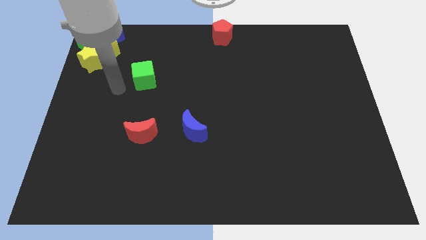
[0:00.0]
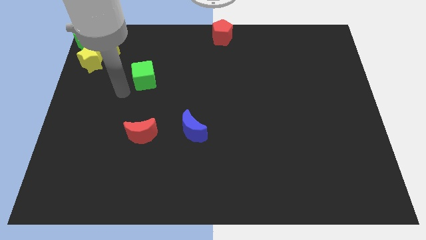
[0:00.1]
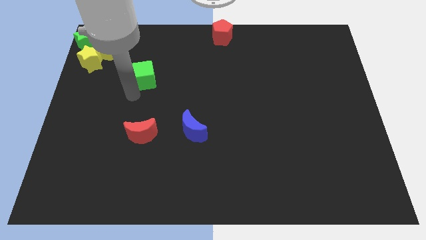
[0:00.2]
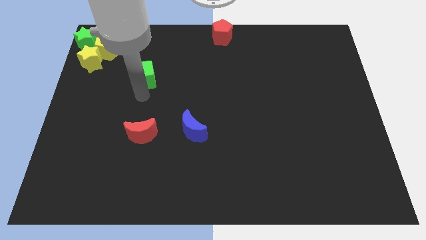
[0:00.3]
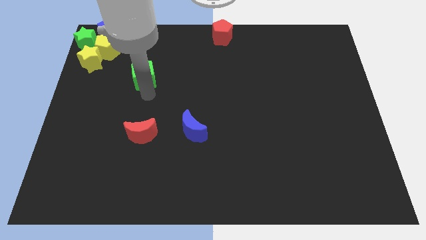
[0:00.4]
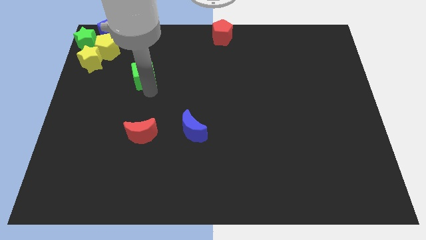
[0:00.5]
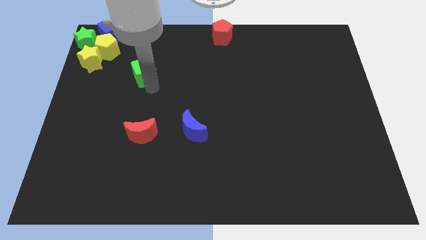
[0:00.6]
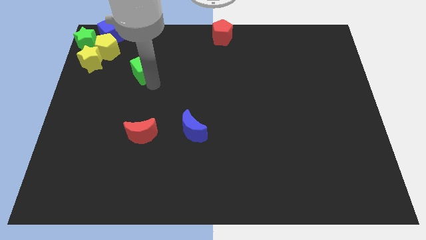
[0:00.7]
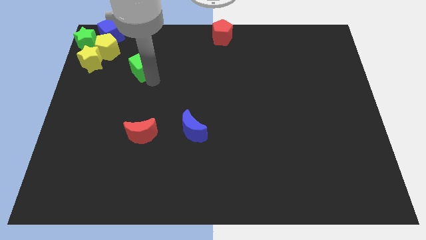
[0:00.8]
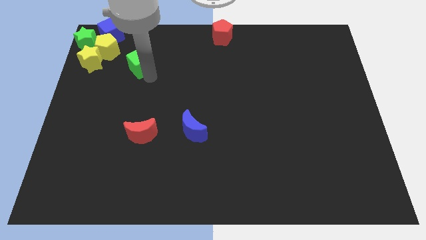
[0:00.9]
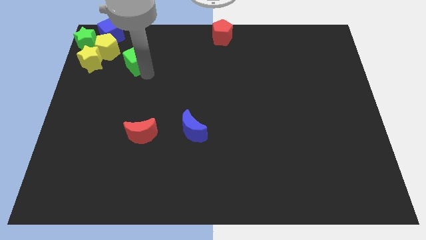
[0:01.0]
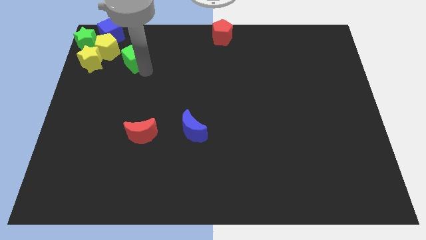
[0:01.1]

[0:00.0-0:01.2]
push the green cube towards the yellow pentagon

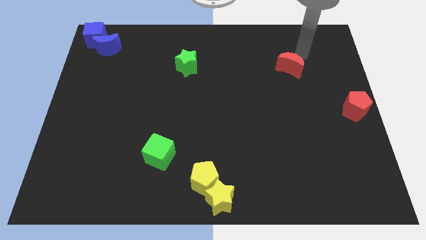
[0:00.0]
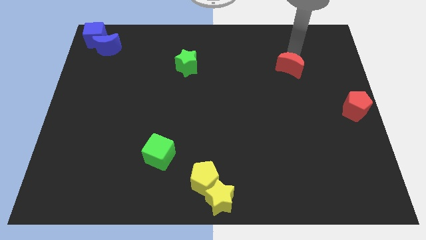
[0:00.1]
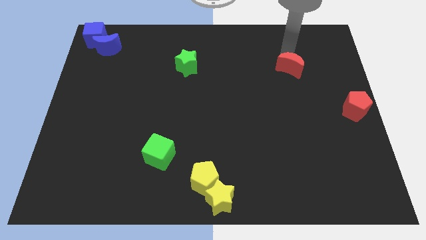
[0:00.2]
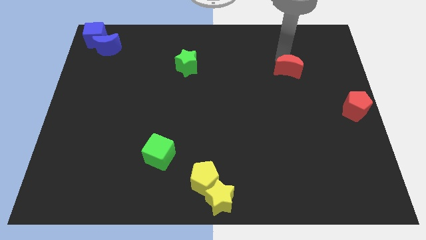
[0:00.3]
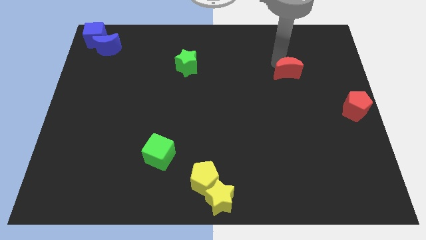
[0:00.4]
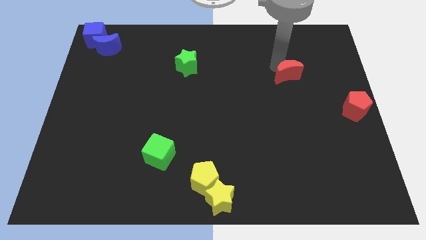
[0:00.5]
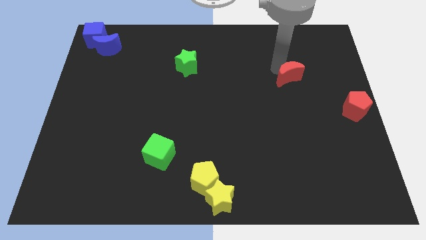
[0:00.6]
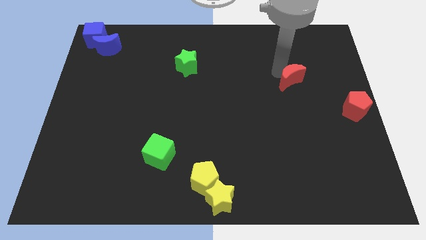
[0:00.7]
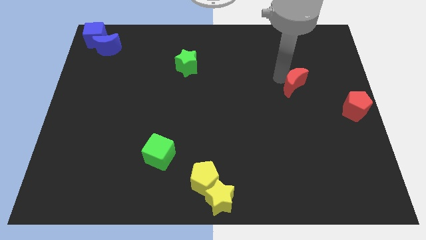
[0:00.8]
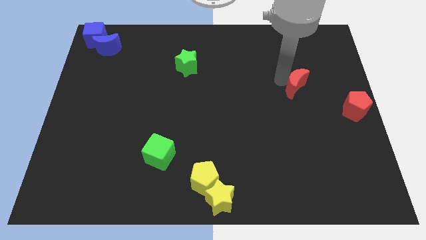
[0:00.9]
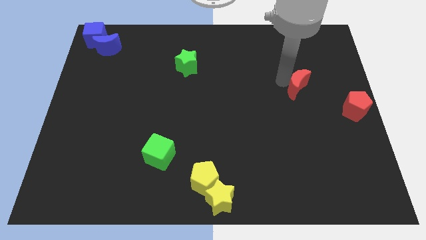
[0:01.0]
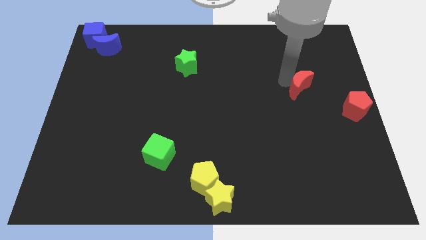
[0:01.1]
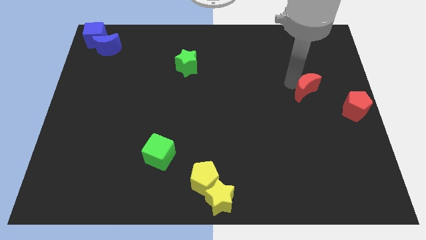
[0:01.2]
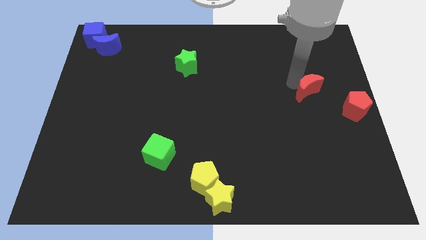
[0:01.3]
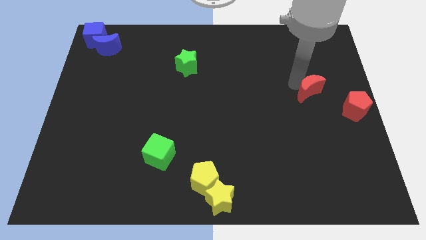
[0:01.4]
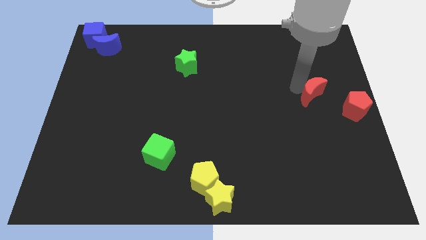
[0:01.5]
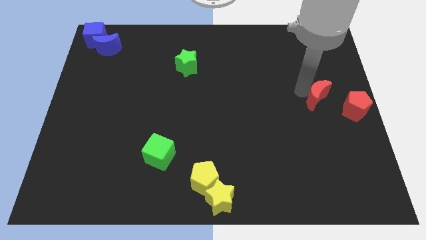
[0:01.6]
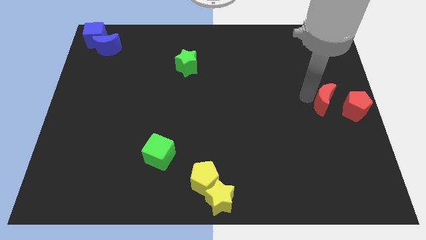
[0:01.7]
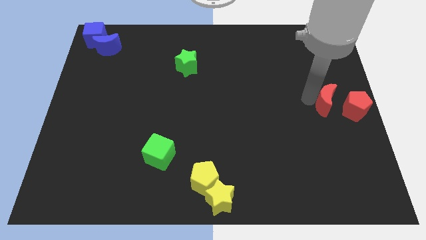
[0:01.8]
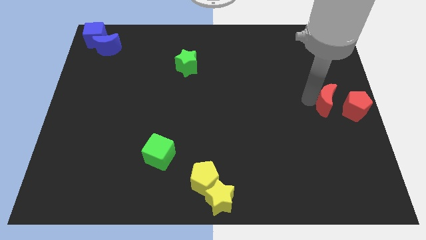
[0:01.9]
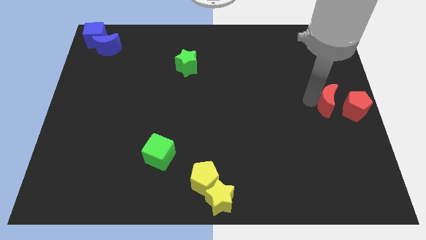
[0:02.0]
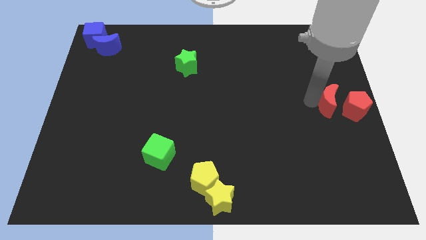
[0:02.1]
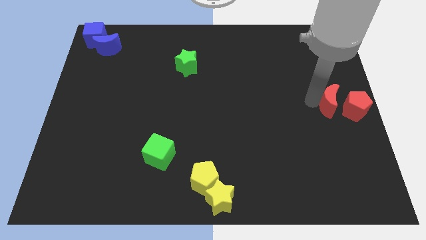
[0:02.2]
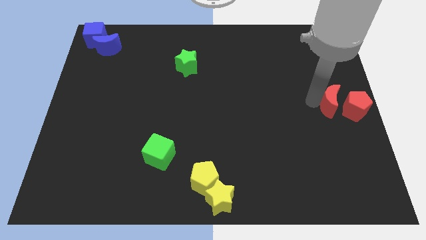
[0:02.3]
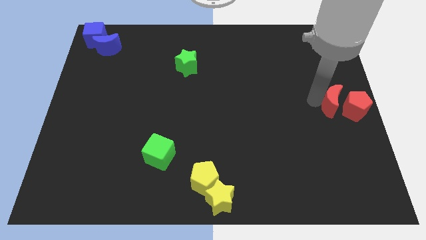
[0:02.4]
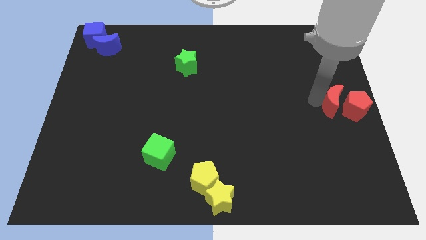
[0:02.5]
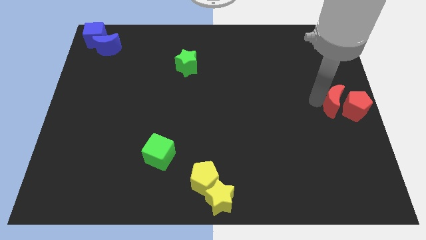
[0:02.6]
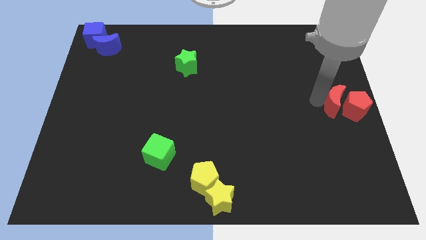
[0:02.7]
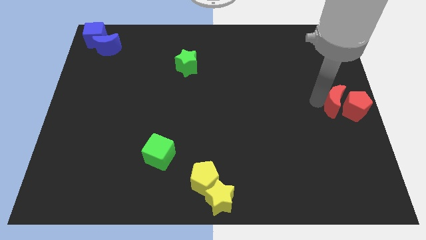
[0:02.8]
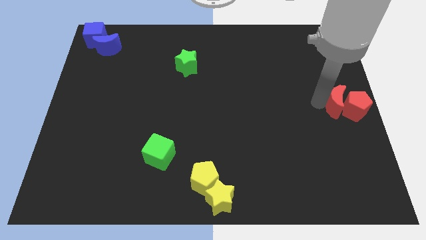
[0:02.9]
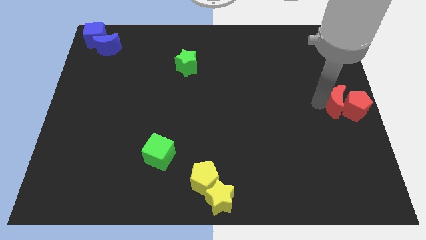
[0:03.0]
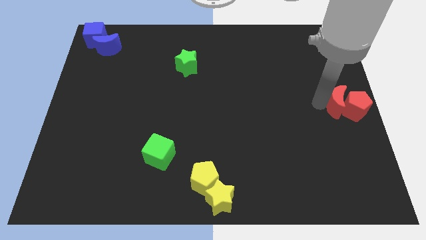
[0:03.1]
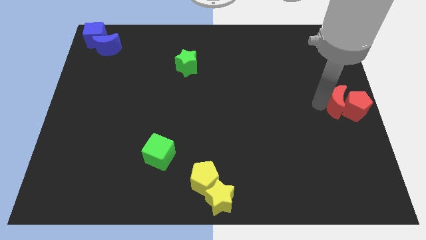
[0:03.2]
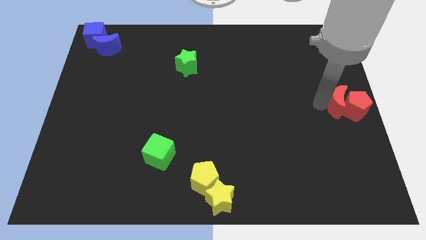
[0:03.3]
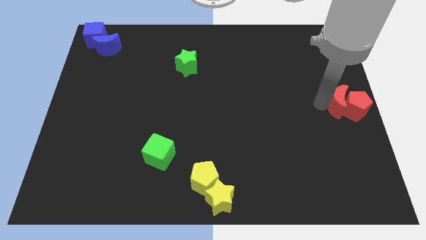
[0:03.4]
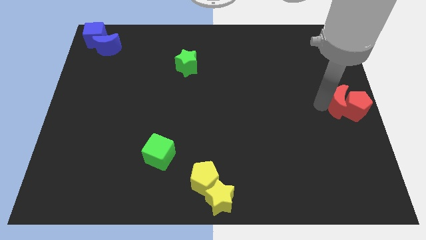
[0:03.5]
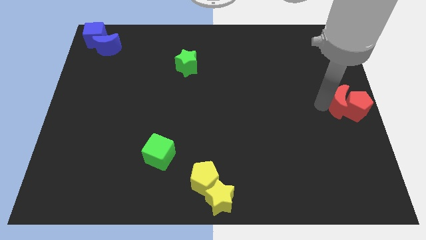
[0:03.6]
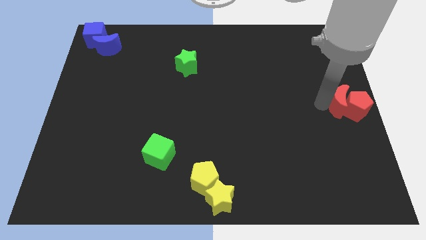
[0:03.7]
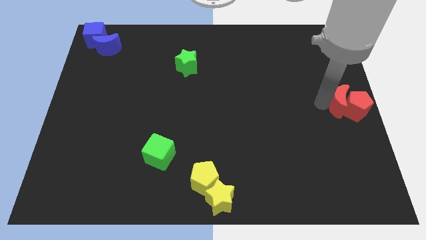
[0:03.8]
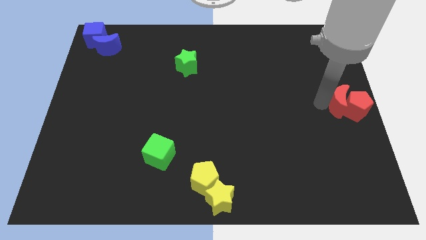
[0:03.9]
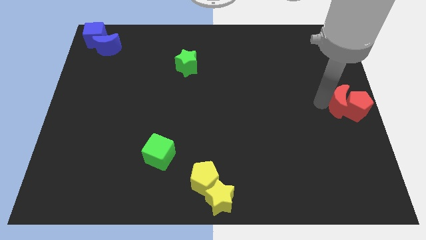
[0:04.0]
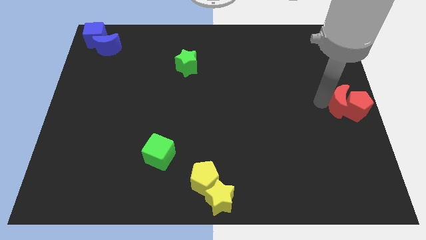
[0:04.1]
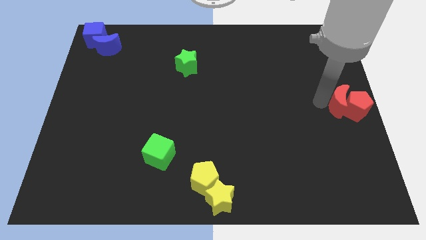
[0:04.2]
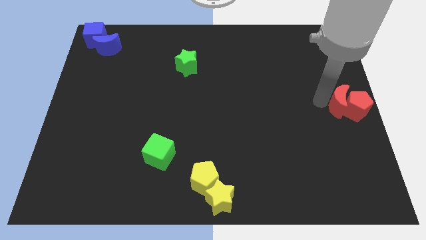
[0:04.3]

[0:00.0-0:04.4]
place the red crescent left to the red pentagon

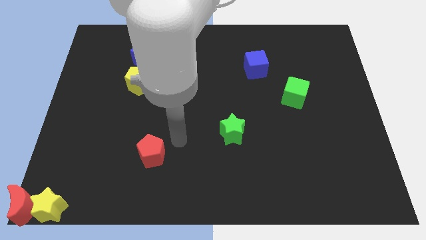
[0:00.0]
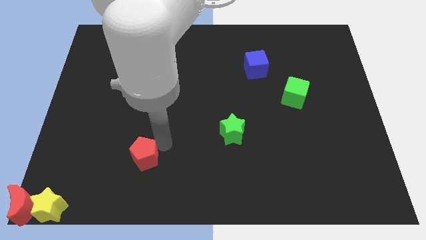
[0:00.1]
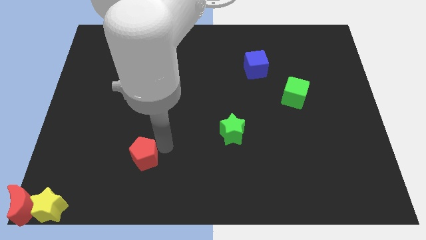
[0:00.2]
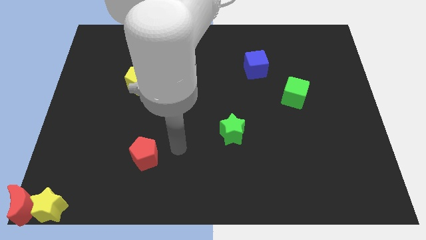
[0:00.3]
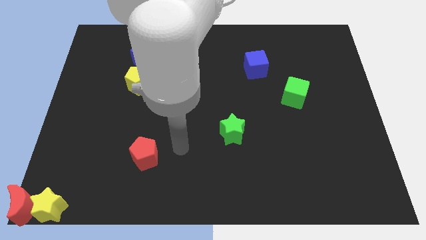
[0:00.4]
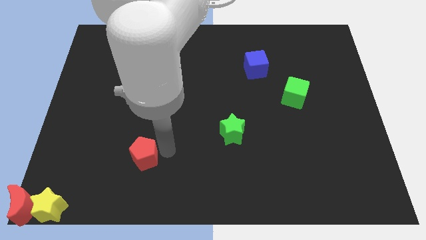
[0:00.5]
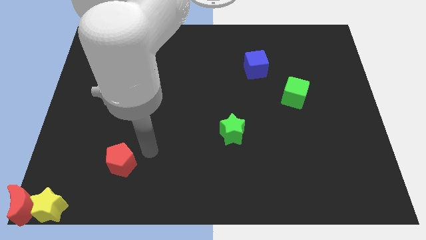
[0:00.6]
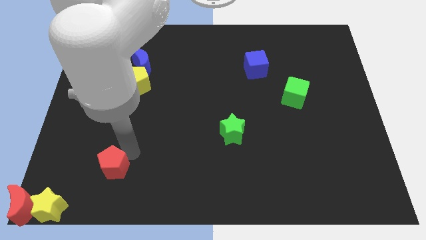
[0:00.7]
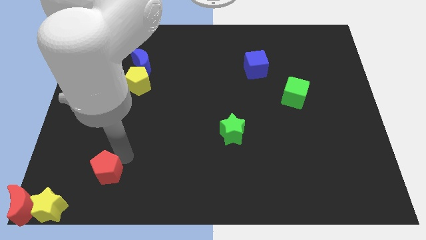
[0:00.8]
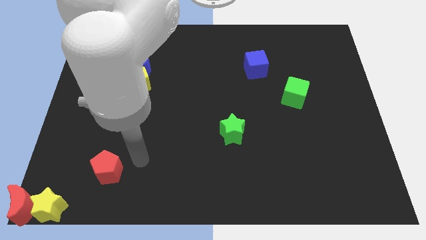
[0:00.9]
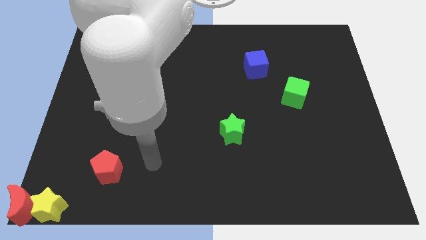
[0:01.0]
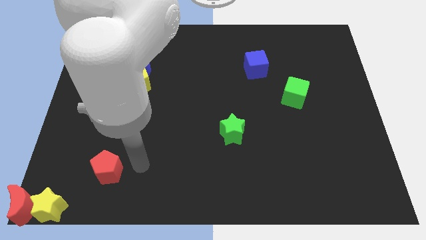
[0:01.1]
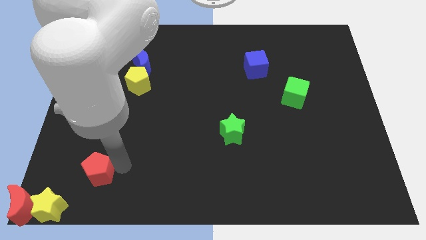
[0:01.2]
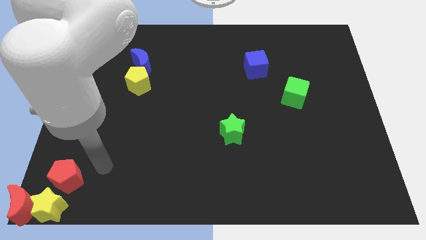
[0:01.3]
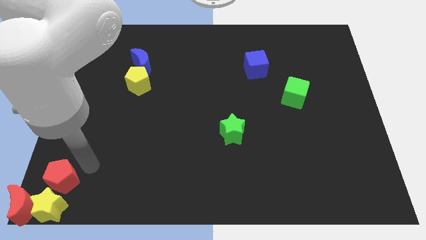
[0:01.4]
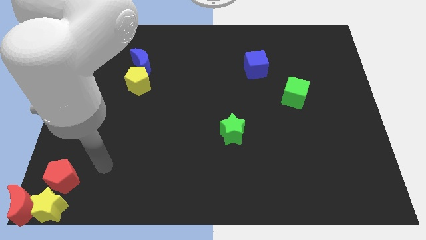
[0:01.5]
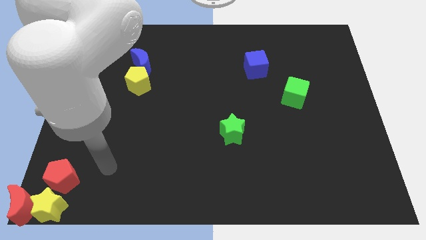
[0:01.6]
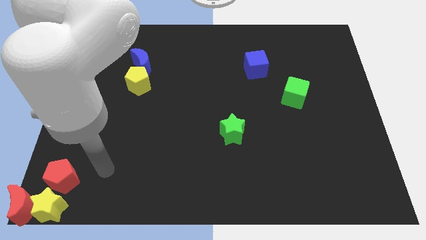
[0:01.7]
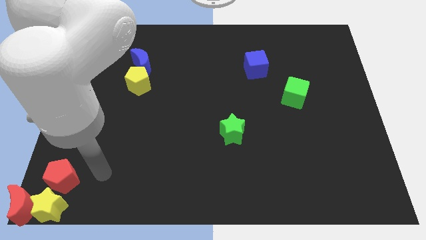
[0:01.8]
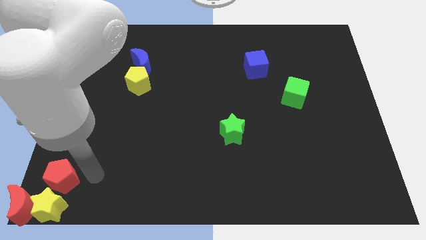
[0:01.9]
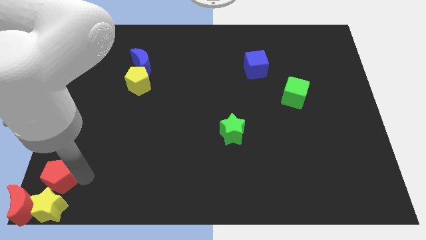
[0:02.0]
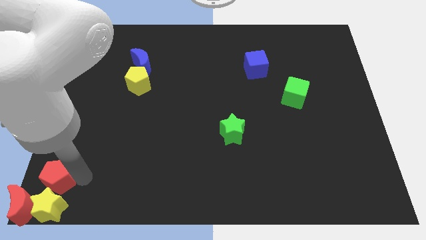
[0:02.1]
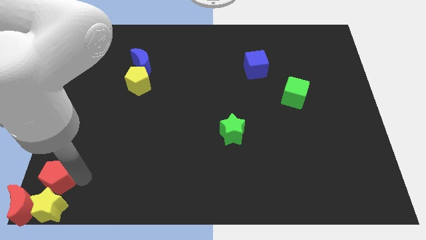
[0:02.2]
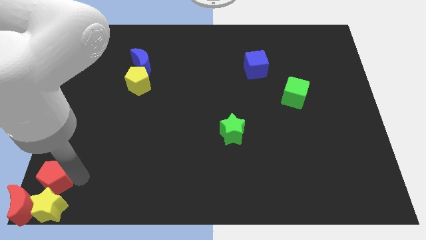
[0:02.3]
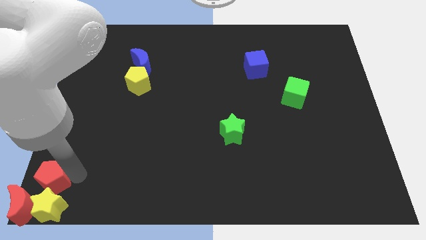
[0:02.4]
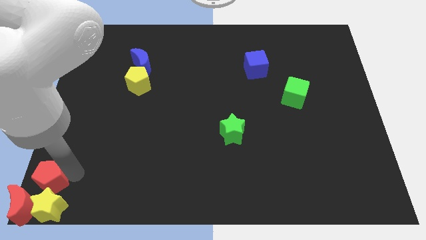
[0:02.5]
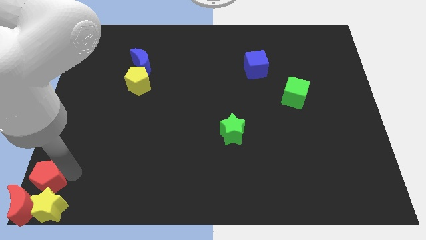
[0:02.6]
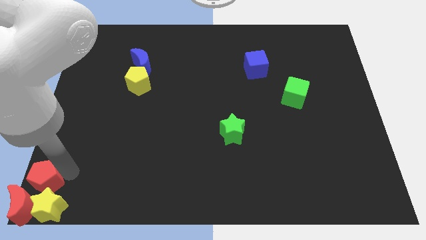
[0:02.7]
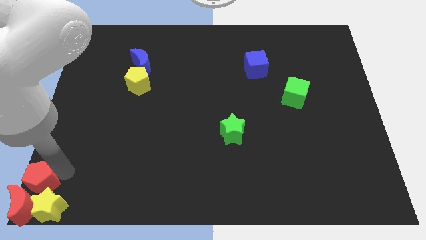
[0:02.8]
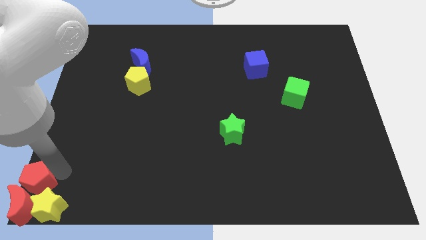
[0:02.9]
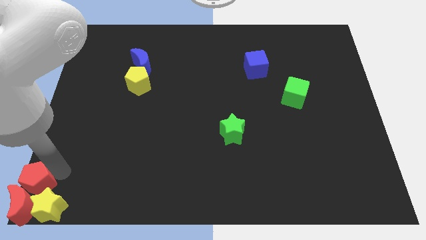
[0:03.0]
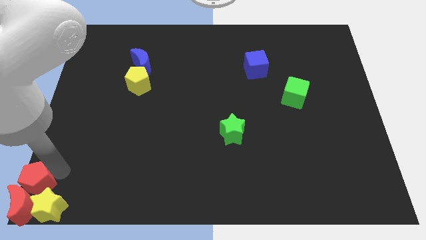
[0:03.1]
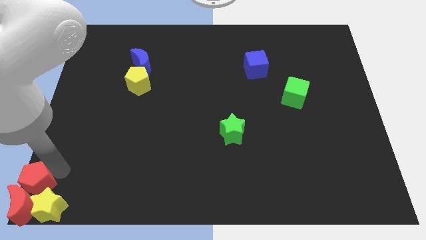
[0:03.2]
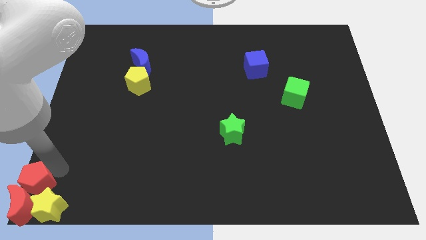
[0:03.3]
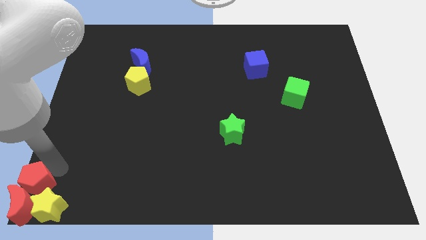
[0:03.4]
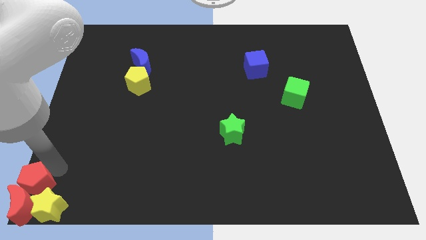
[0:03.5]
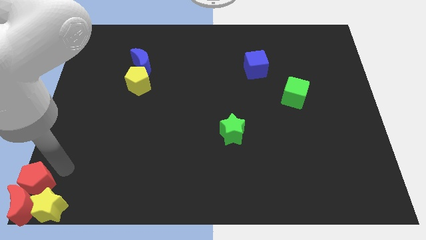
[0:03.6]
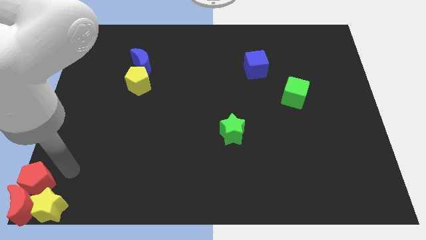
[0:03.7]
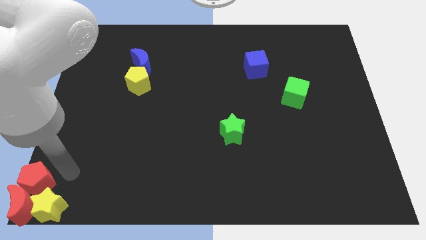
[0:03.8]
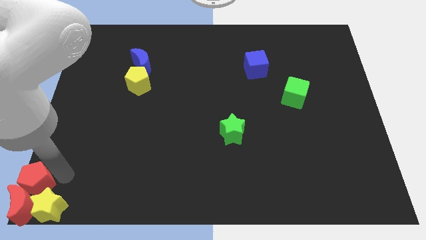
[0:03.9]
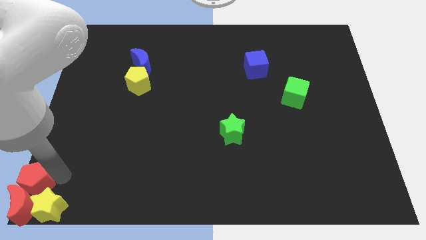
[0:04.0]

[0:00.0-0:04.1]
place red pentagon above the red moon
